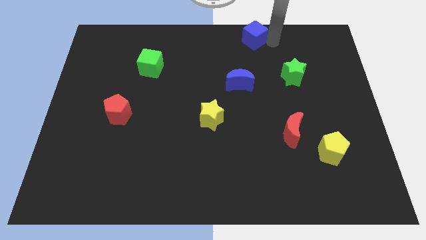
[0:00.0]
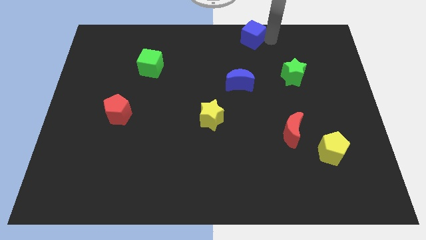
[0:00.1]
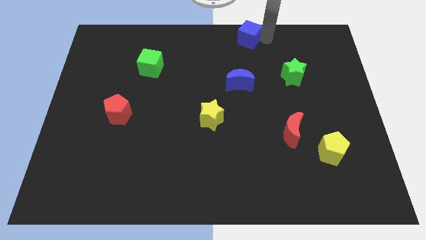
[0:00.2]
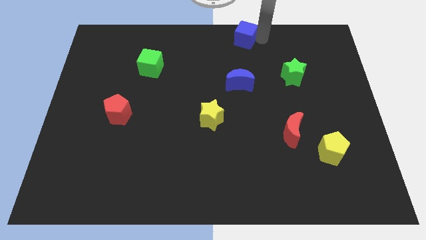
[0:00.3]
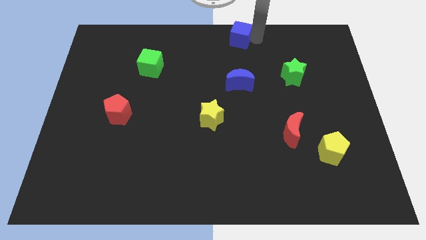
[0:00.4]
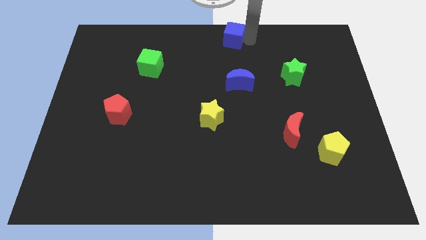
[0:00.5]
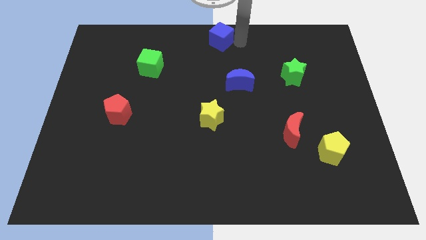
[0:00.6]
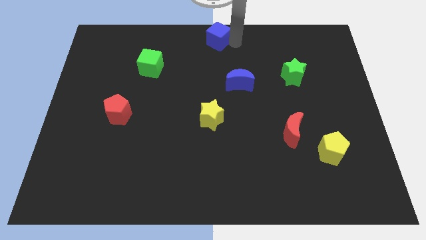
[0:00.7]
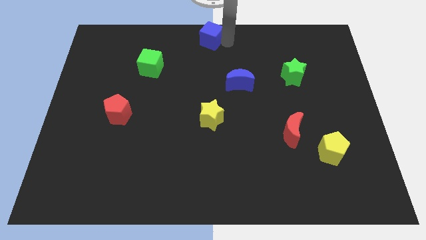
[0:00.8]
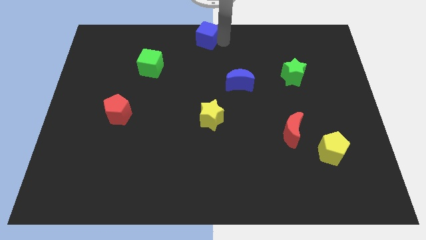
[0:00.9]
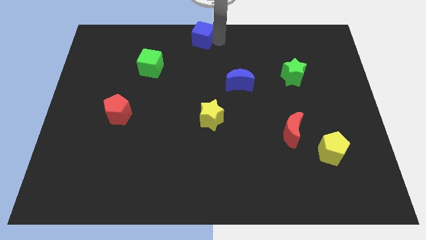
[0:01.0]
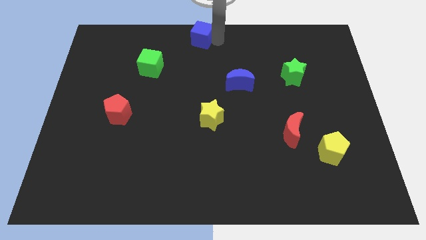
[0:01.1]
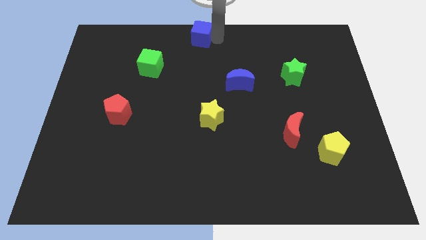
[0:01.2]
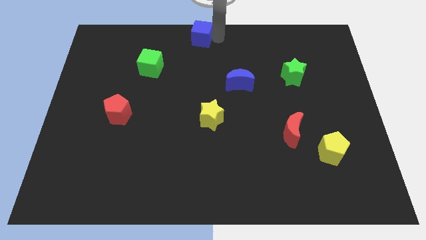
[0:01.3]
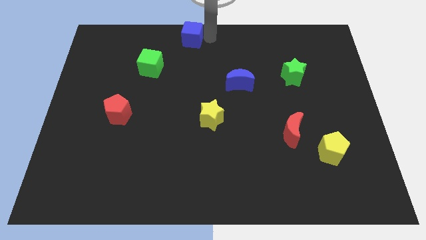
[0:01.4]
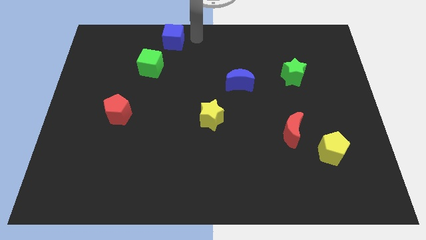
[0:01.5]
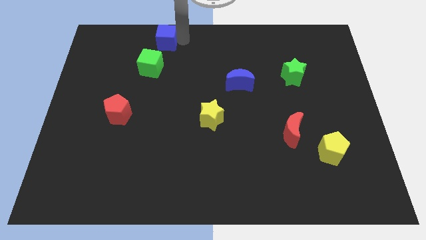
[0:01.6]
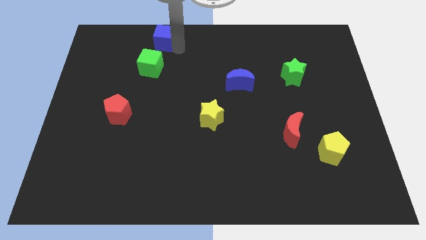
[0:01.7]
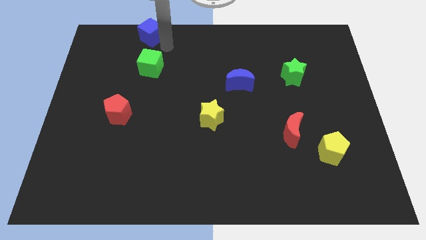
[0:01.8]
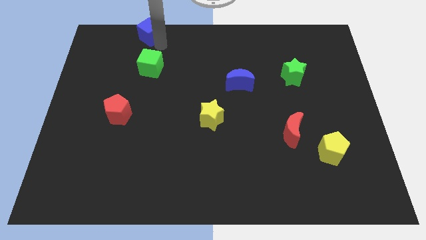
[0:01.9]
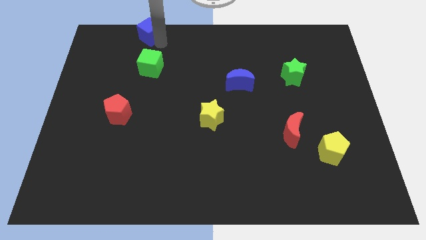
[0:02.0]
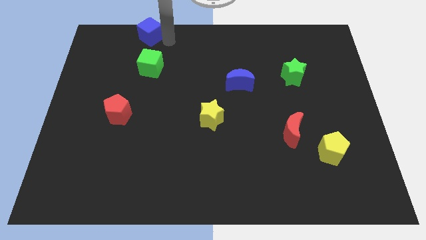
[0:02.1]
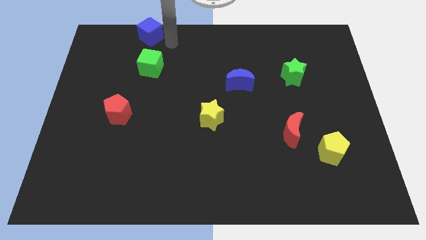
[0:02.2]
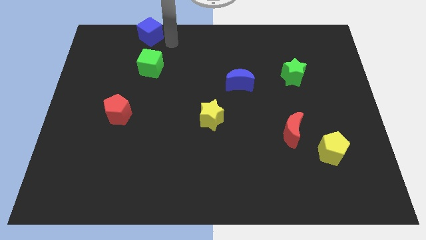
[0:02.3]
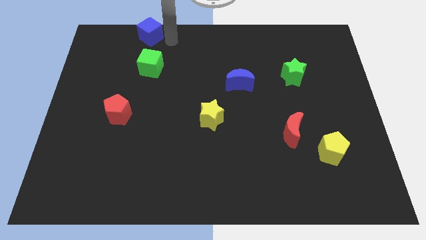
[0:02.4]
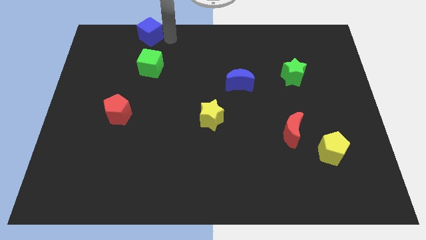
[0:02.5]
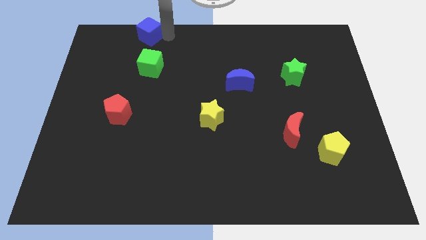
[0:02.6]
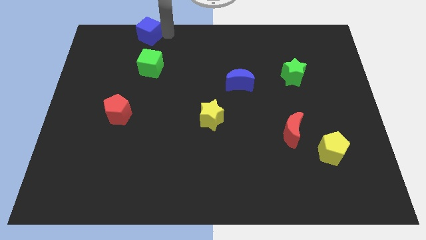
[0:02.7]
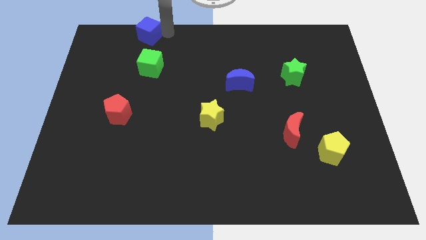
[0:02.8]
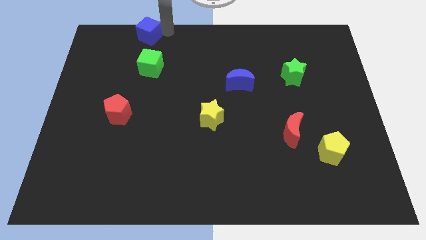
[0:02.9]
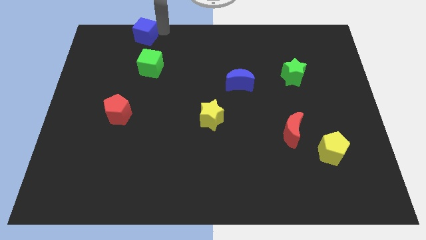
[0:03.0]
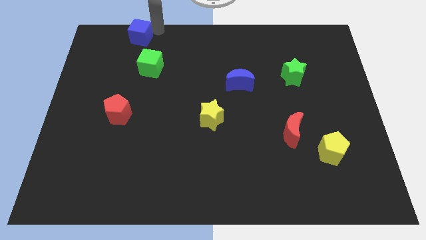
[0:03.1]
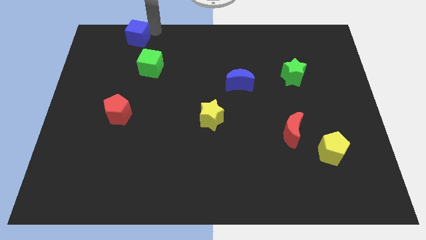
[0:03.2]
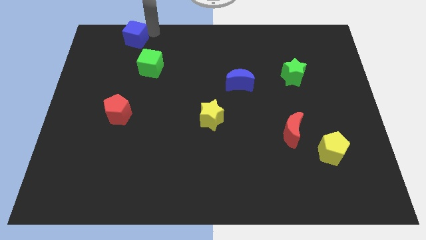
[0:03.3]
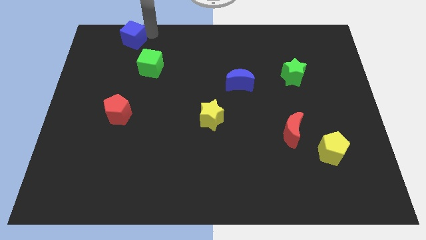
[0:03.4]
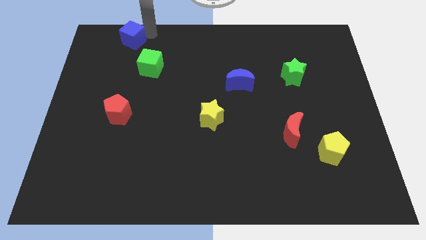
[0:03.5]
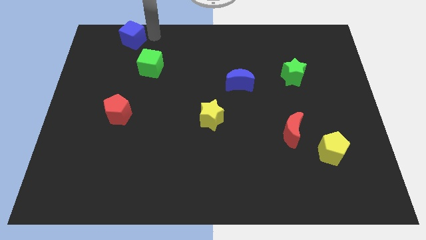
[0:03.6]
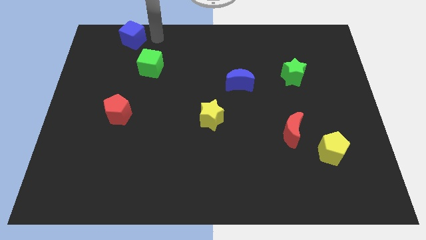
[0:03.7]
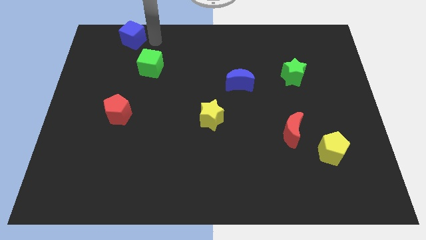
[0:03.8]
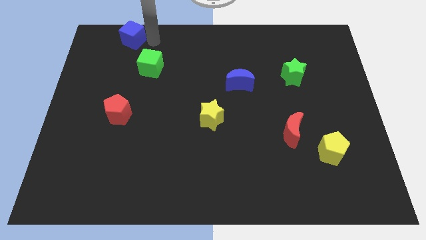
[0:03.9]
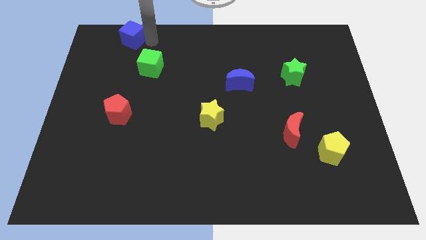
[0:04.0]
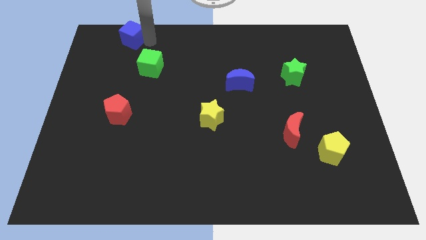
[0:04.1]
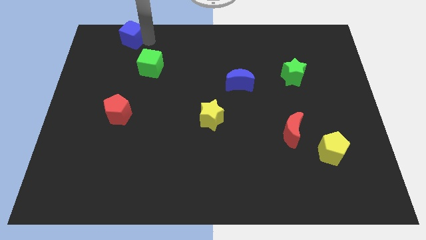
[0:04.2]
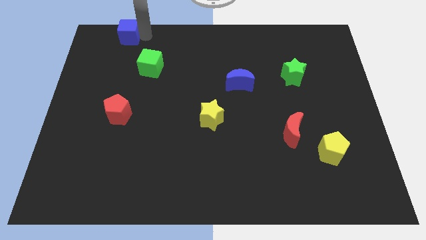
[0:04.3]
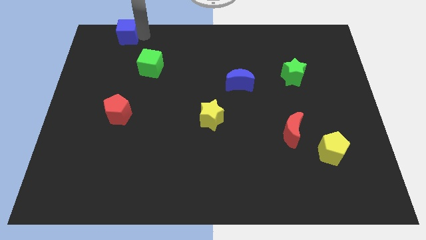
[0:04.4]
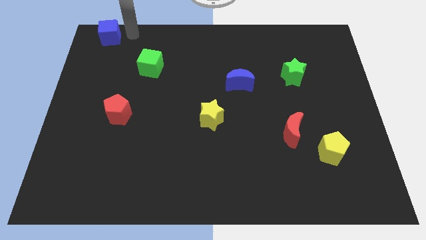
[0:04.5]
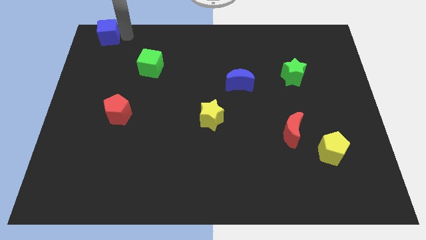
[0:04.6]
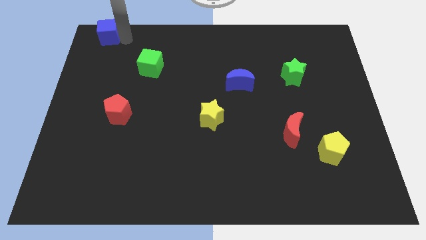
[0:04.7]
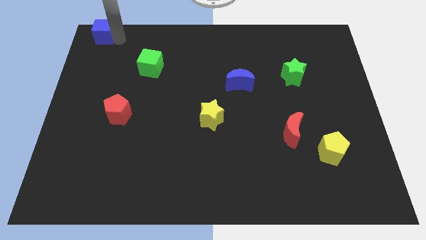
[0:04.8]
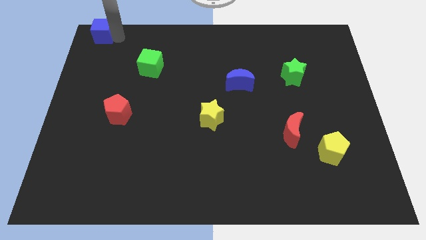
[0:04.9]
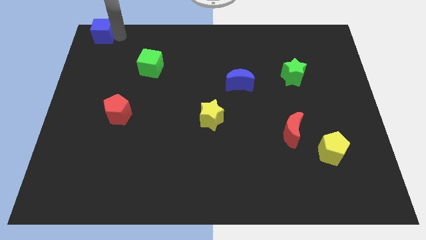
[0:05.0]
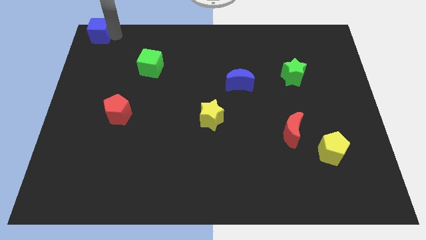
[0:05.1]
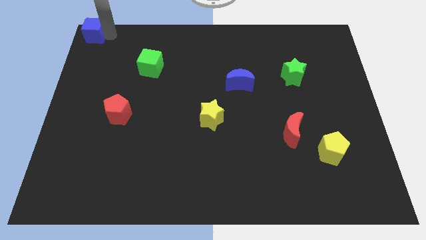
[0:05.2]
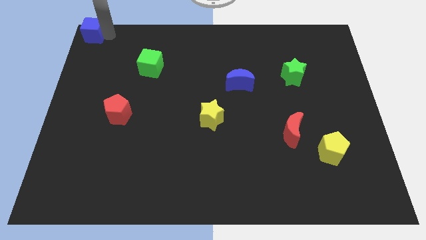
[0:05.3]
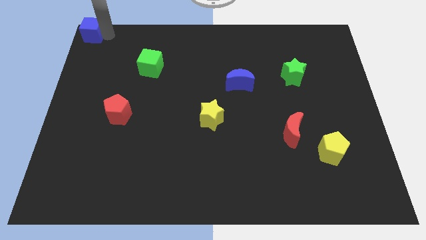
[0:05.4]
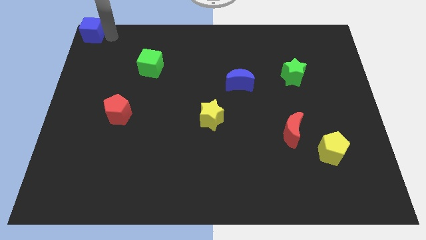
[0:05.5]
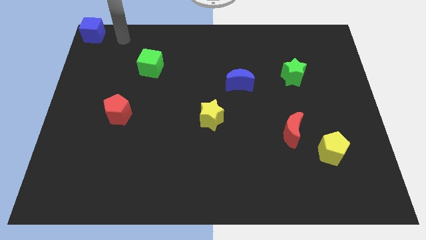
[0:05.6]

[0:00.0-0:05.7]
place the blue cube above the red pentagon

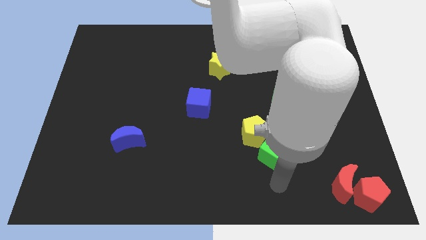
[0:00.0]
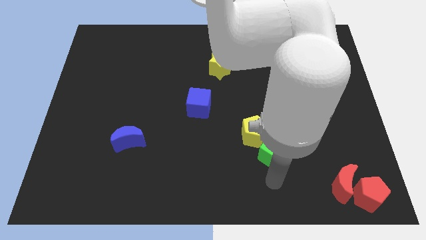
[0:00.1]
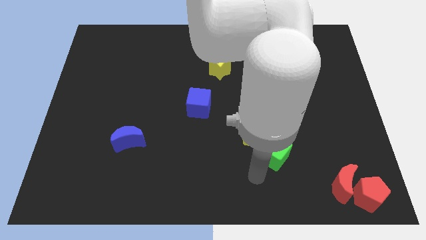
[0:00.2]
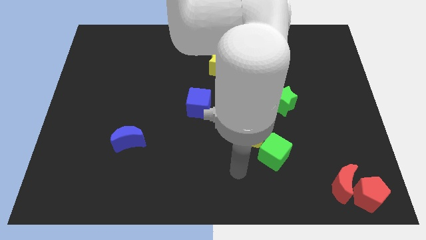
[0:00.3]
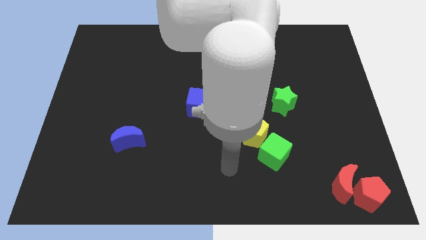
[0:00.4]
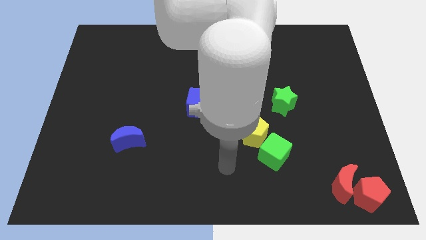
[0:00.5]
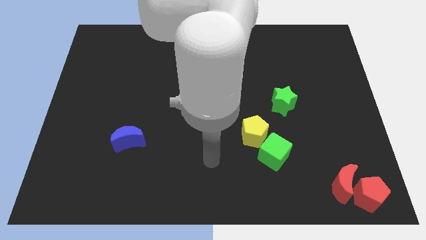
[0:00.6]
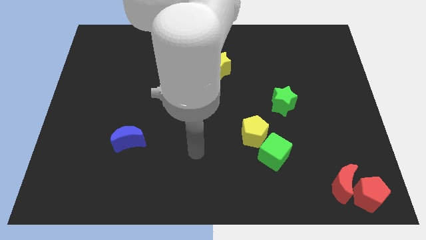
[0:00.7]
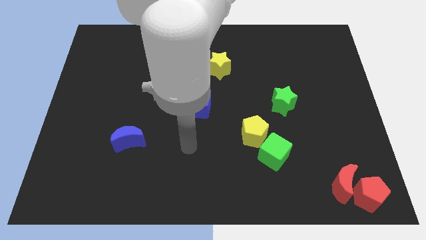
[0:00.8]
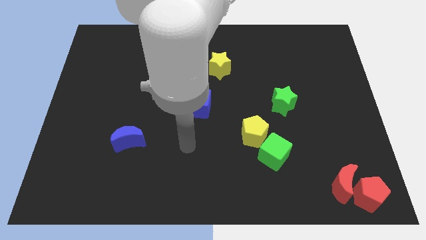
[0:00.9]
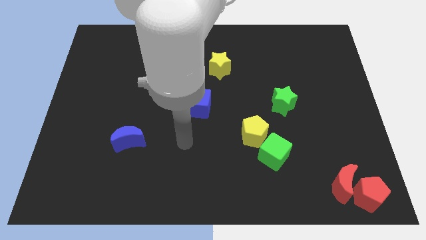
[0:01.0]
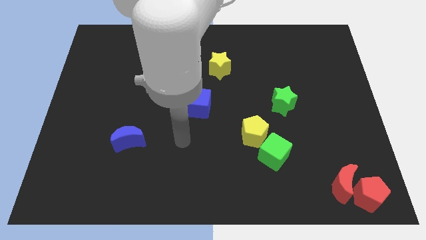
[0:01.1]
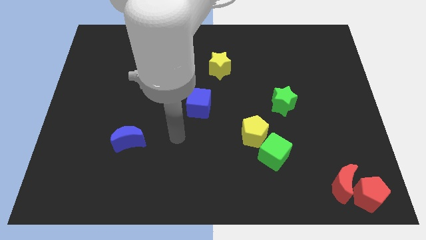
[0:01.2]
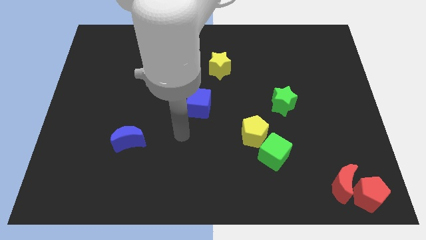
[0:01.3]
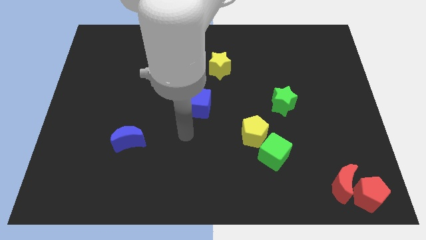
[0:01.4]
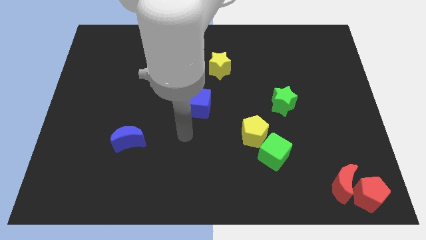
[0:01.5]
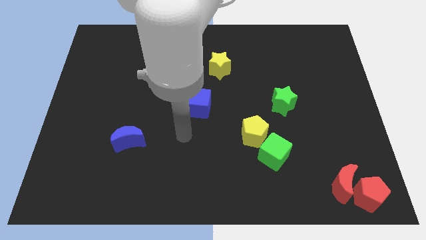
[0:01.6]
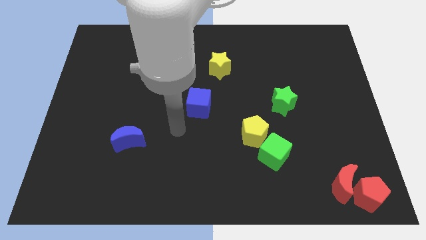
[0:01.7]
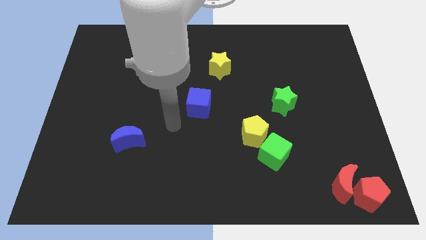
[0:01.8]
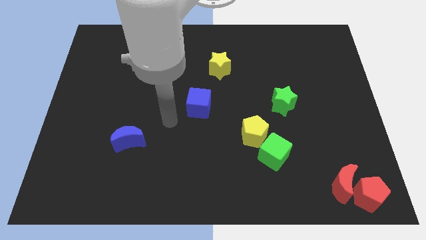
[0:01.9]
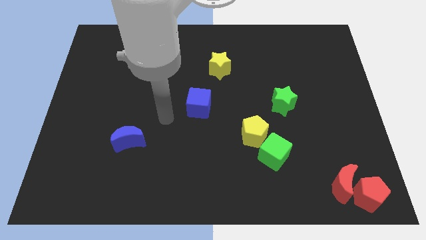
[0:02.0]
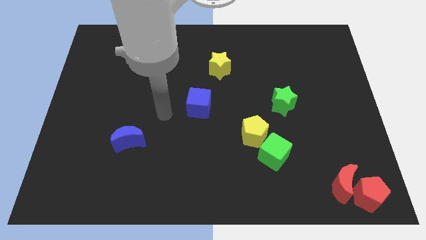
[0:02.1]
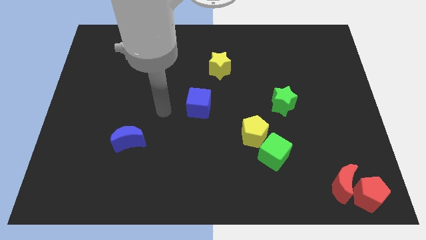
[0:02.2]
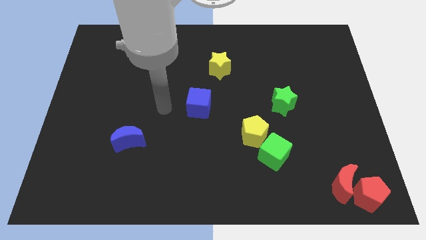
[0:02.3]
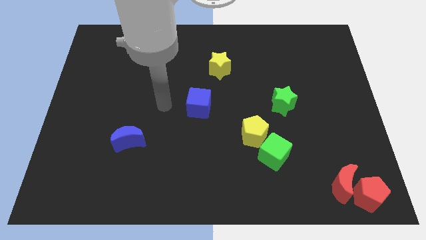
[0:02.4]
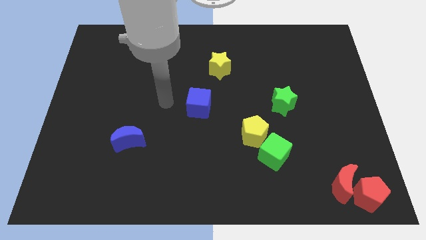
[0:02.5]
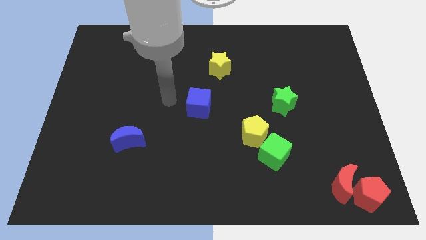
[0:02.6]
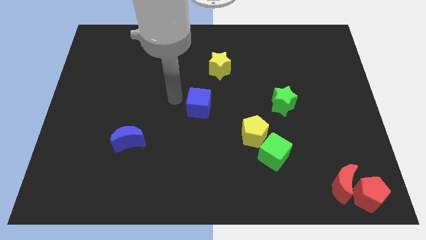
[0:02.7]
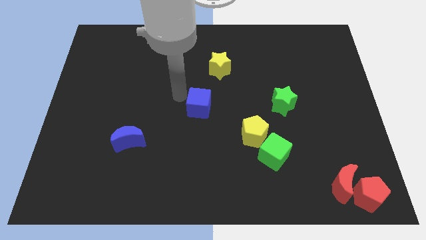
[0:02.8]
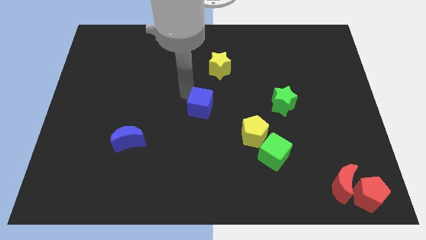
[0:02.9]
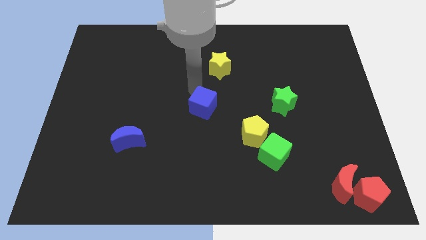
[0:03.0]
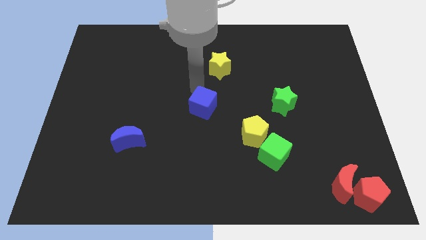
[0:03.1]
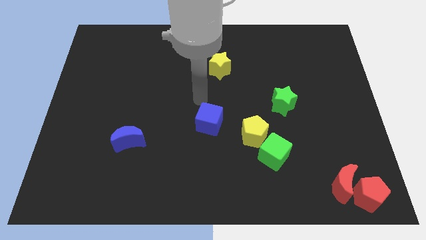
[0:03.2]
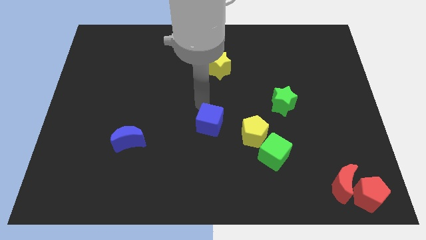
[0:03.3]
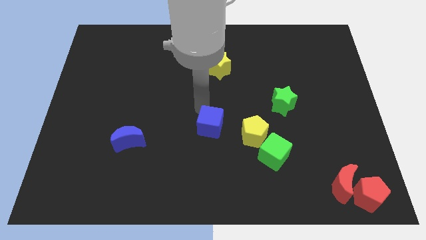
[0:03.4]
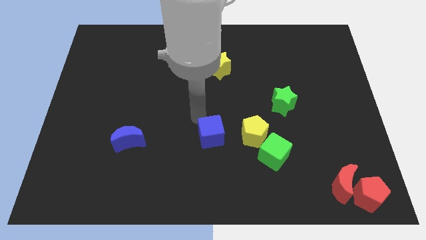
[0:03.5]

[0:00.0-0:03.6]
move blue cube to the left of yellow pentagon
